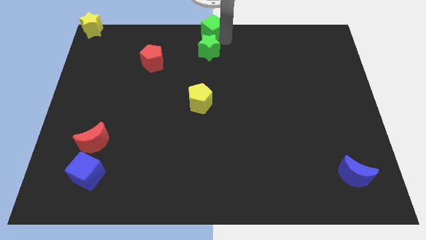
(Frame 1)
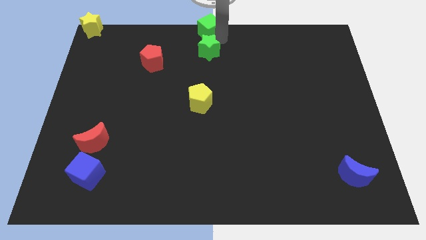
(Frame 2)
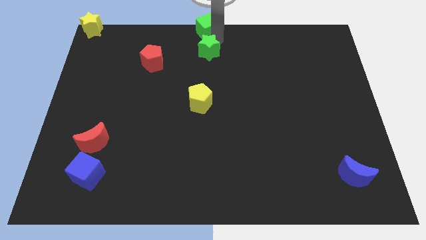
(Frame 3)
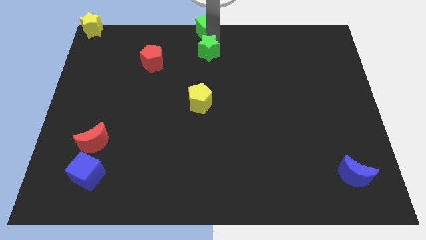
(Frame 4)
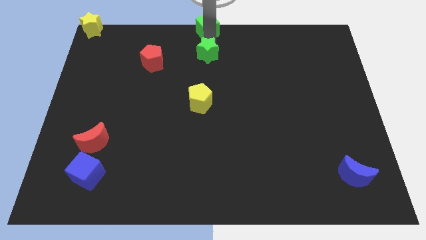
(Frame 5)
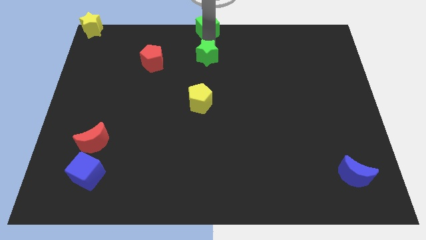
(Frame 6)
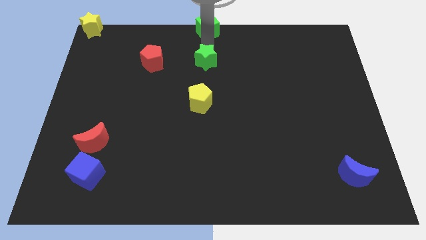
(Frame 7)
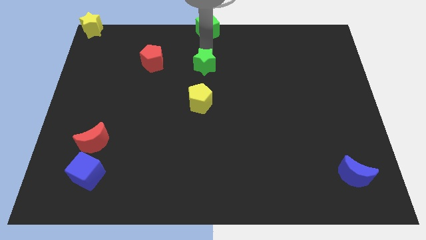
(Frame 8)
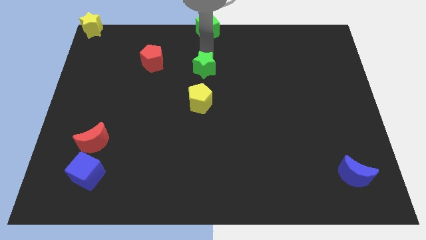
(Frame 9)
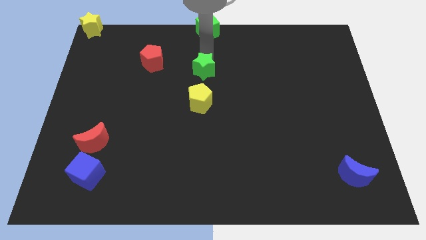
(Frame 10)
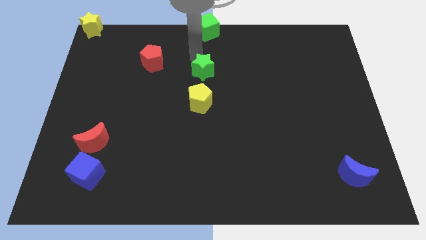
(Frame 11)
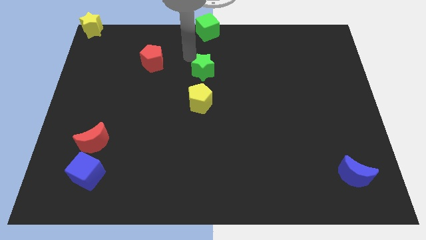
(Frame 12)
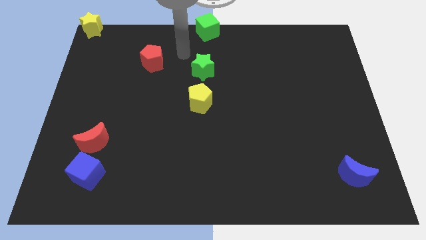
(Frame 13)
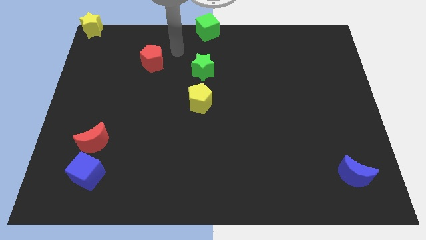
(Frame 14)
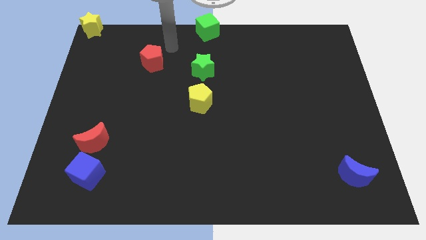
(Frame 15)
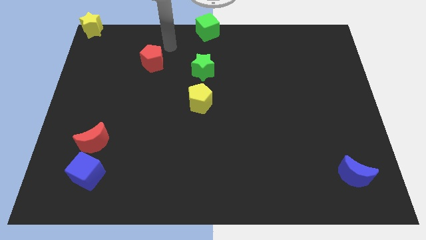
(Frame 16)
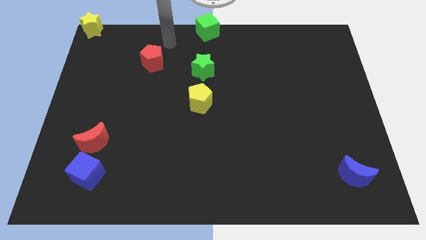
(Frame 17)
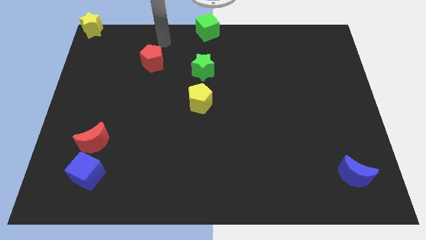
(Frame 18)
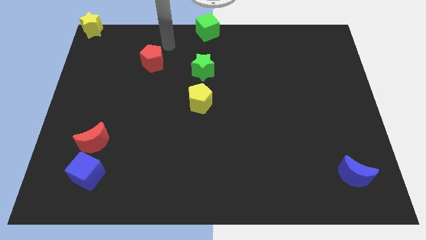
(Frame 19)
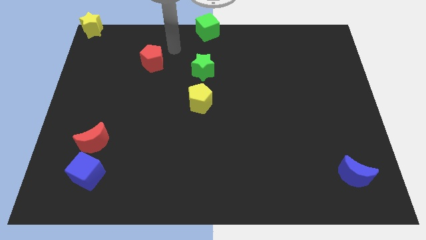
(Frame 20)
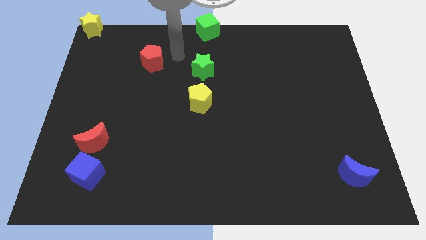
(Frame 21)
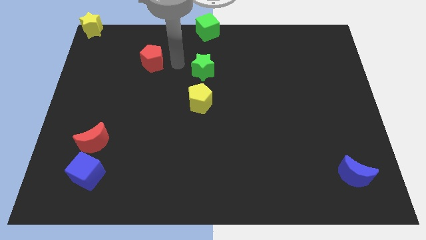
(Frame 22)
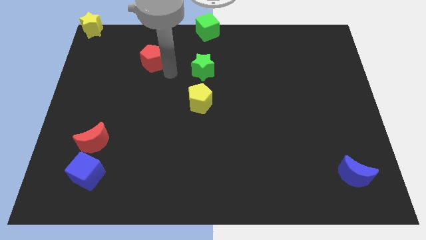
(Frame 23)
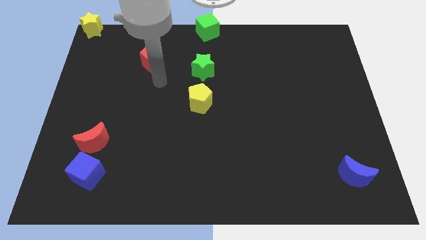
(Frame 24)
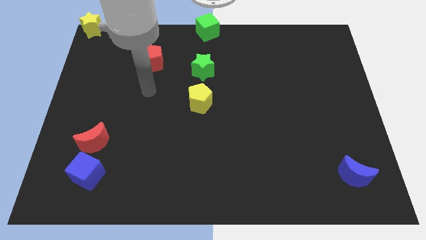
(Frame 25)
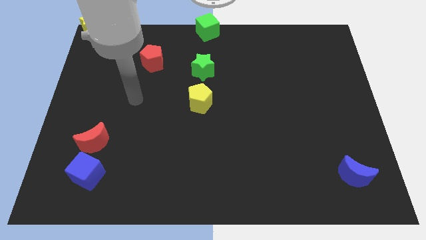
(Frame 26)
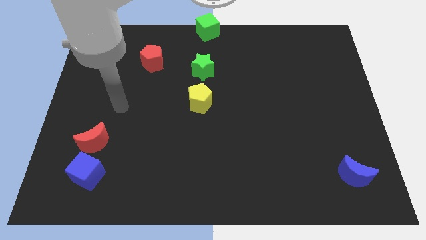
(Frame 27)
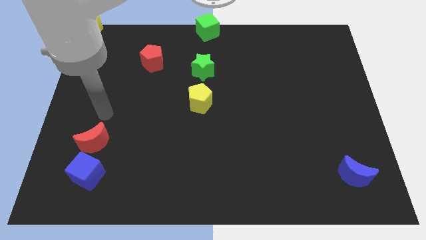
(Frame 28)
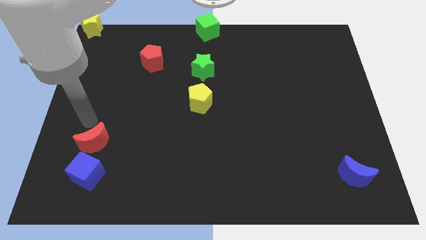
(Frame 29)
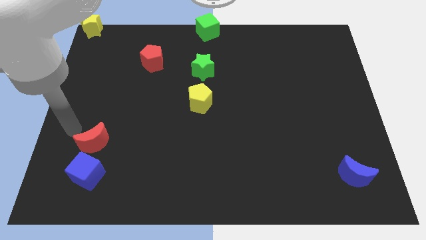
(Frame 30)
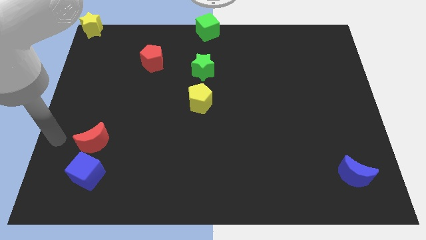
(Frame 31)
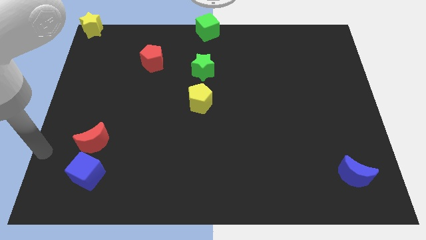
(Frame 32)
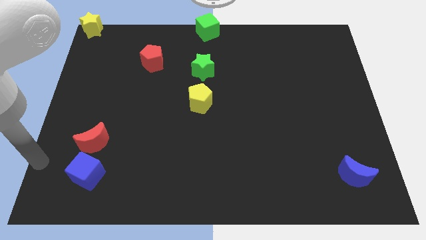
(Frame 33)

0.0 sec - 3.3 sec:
push the green star down slightly

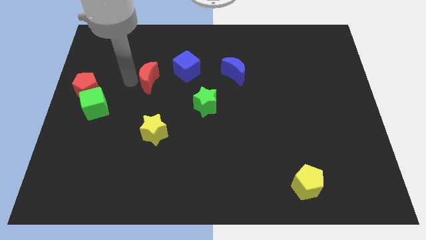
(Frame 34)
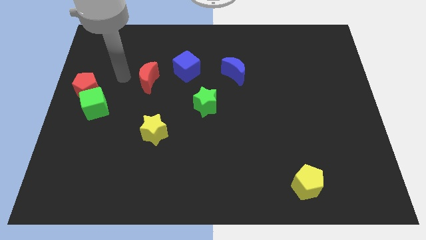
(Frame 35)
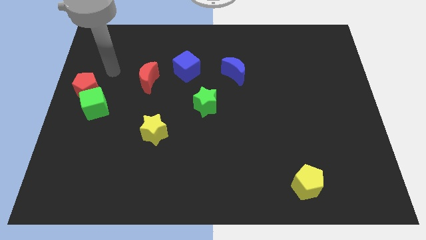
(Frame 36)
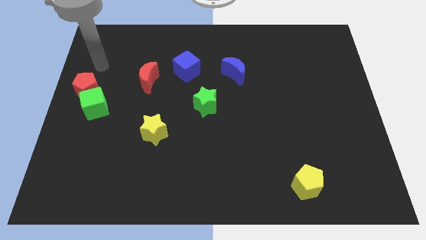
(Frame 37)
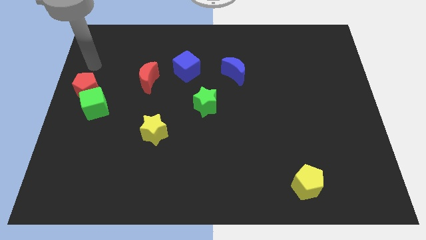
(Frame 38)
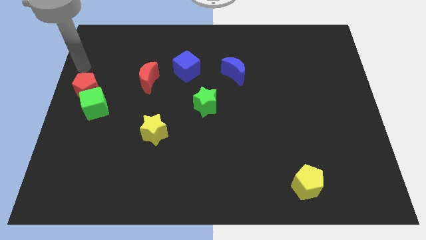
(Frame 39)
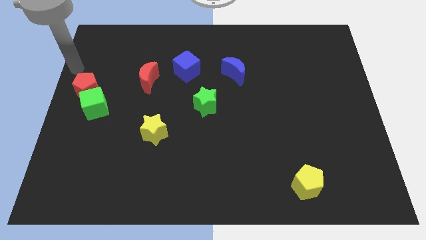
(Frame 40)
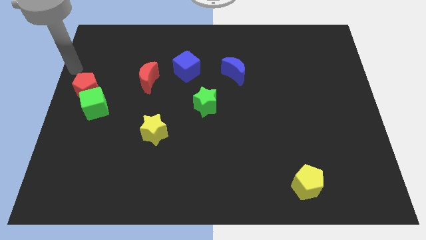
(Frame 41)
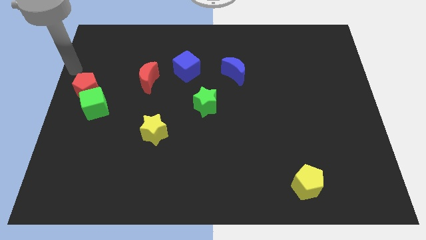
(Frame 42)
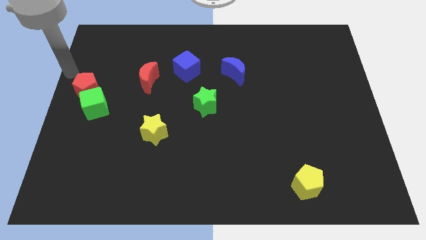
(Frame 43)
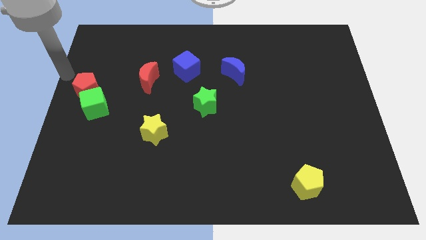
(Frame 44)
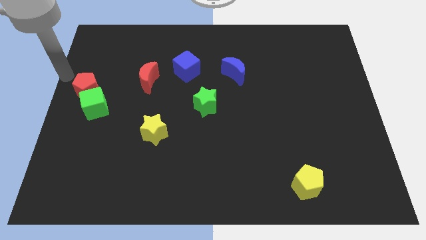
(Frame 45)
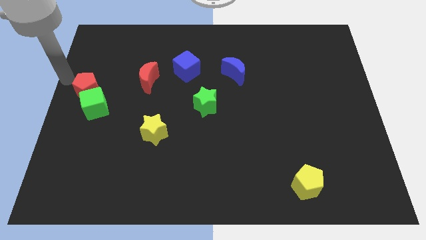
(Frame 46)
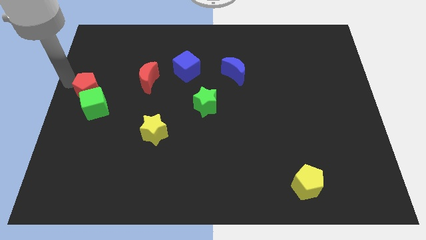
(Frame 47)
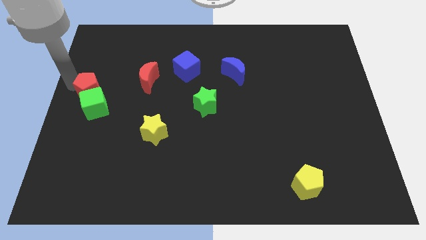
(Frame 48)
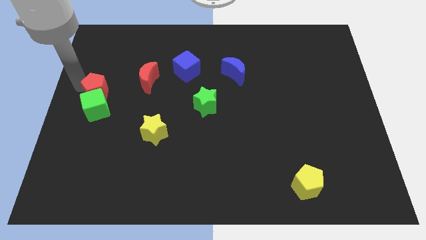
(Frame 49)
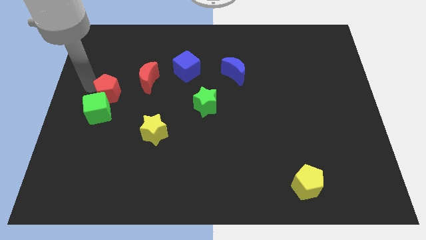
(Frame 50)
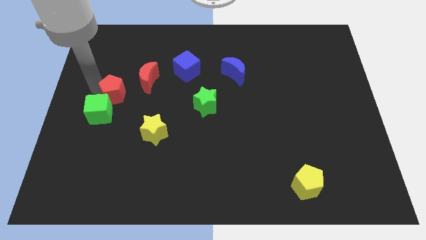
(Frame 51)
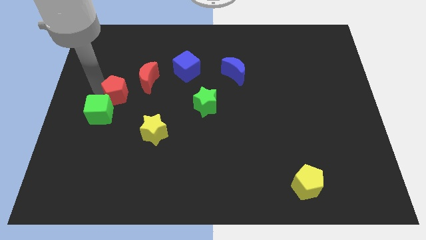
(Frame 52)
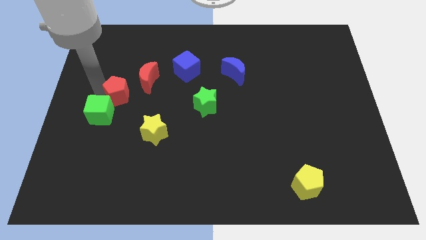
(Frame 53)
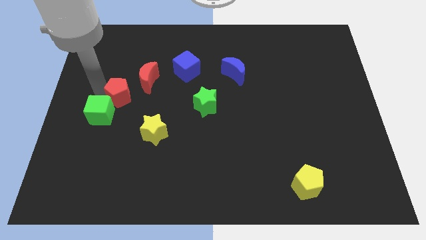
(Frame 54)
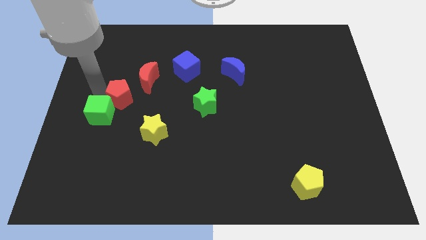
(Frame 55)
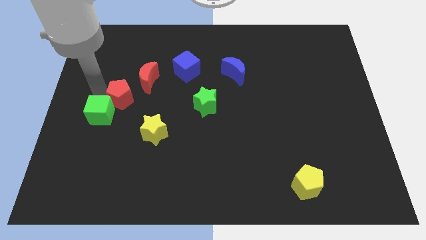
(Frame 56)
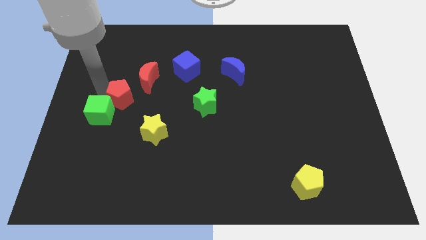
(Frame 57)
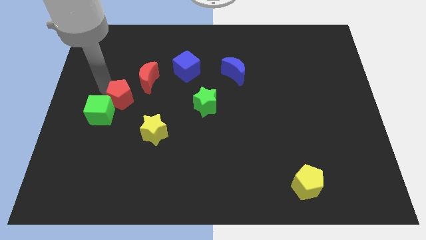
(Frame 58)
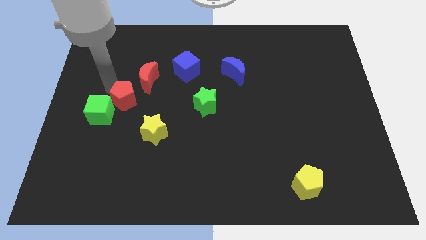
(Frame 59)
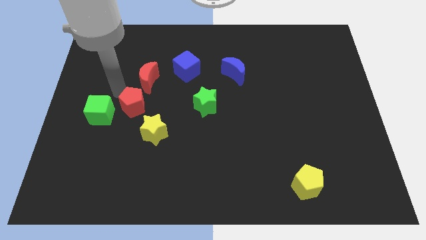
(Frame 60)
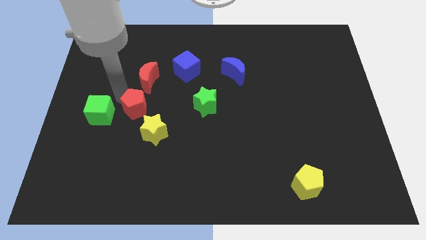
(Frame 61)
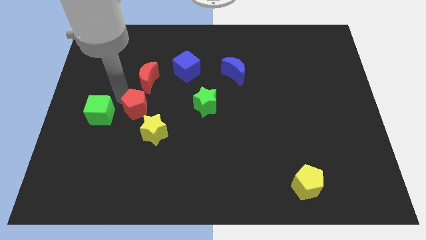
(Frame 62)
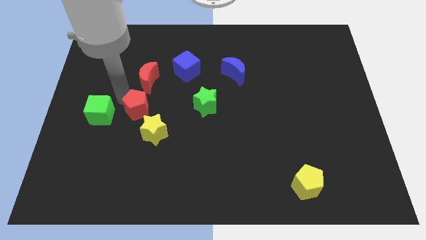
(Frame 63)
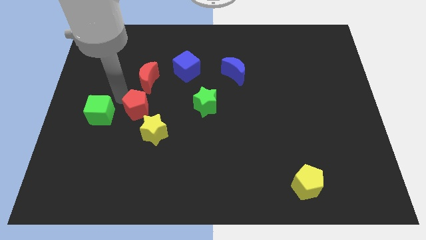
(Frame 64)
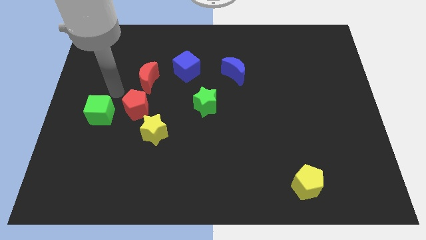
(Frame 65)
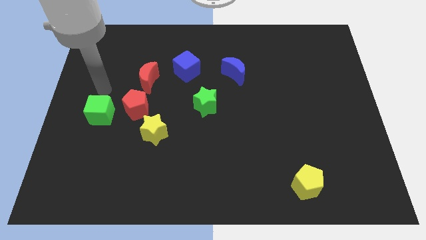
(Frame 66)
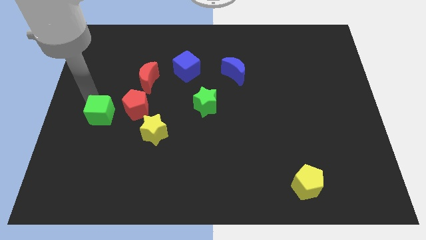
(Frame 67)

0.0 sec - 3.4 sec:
place the red pentagon to the bottom left of the red moon

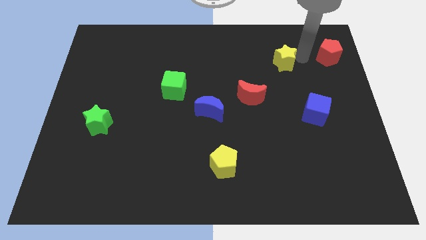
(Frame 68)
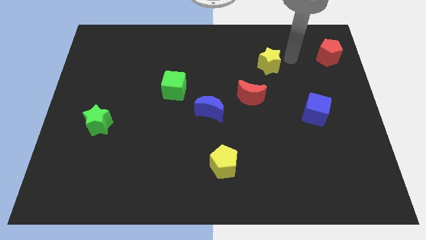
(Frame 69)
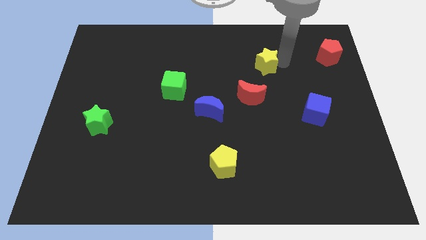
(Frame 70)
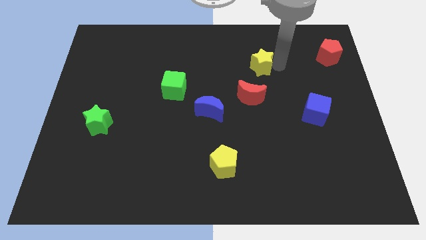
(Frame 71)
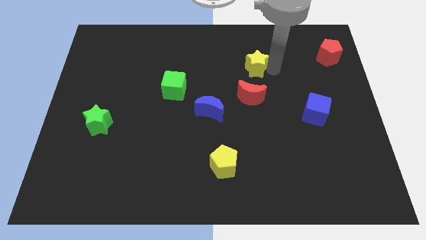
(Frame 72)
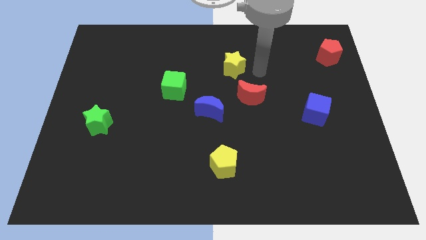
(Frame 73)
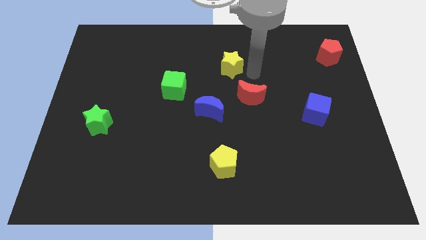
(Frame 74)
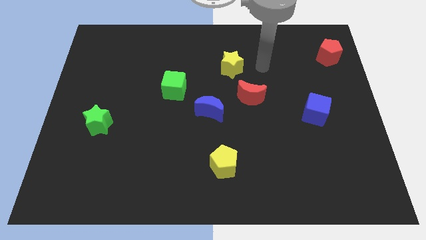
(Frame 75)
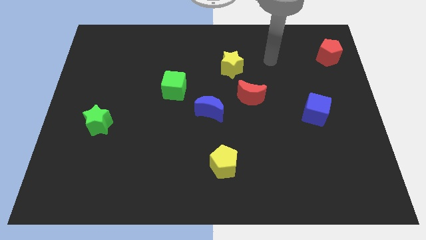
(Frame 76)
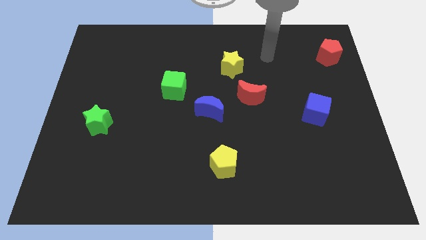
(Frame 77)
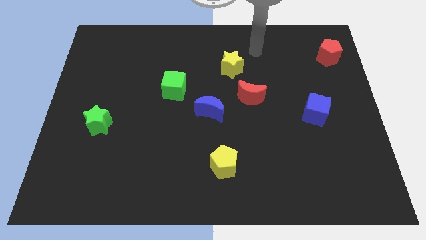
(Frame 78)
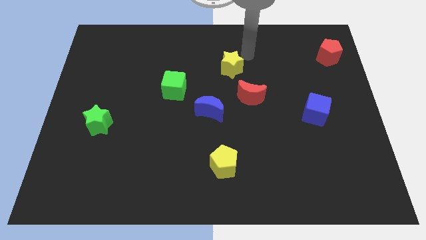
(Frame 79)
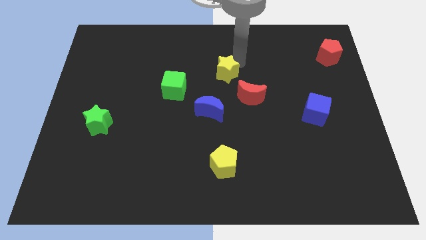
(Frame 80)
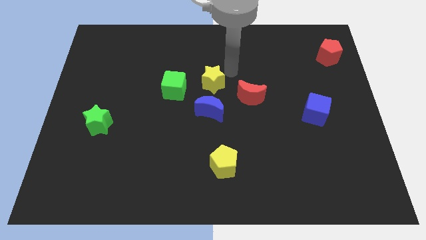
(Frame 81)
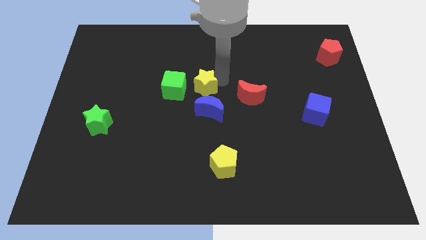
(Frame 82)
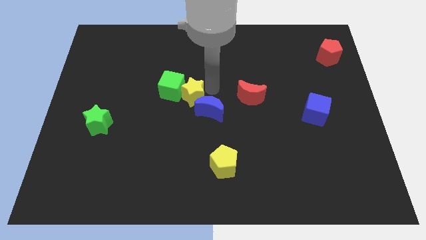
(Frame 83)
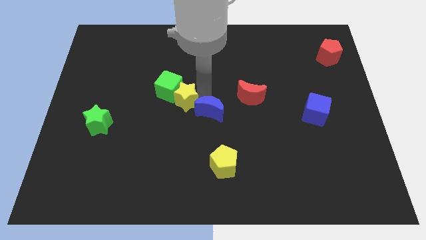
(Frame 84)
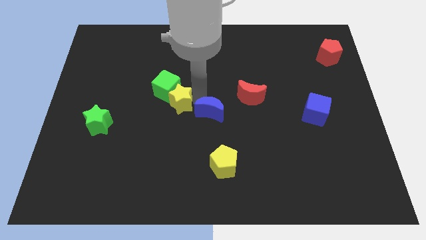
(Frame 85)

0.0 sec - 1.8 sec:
push the yellow star in between the green cube and blue crescent

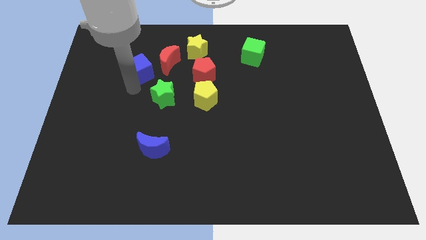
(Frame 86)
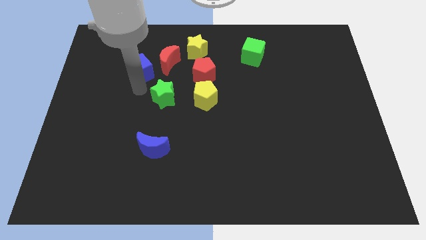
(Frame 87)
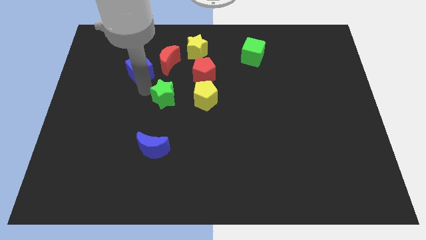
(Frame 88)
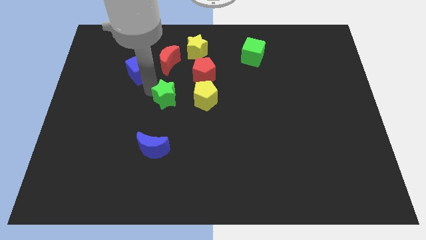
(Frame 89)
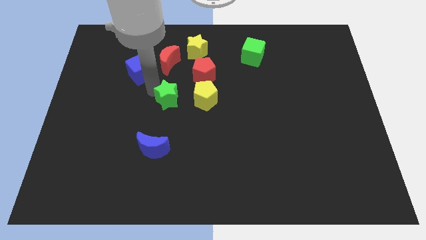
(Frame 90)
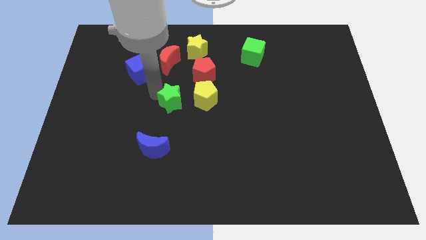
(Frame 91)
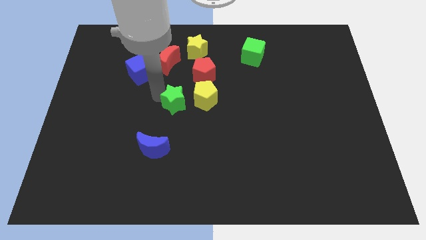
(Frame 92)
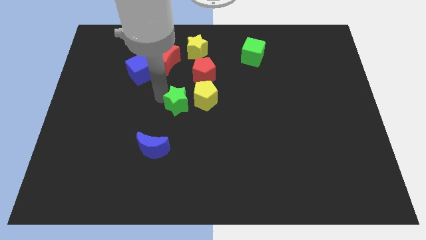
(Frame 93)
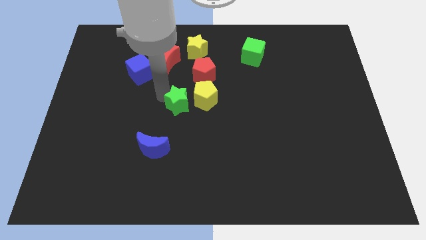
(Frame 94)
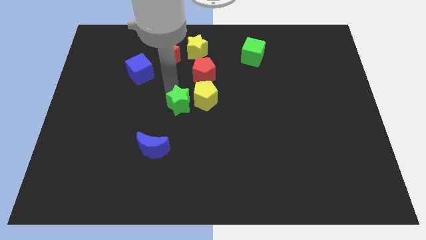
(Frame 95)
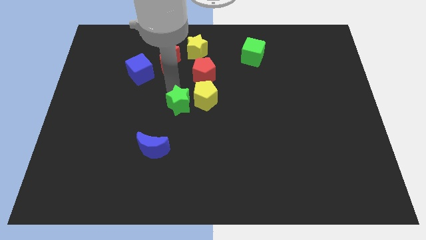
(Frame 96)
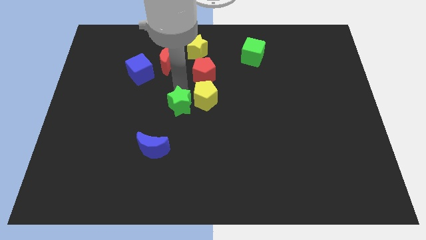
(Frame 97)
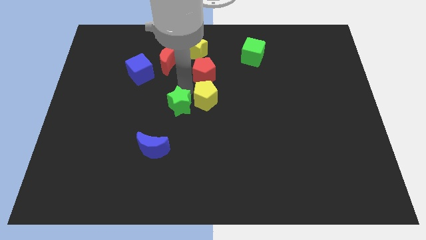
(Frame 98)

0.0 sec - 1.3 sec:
push the green star diagonal left of yellow star
